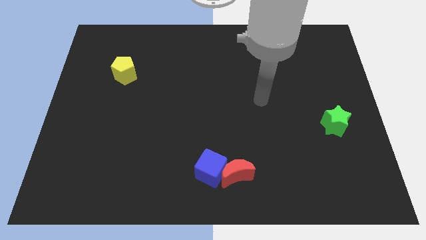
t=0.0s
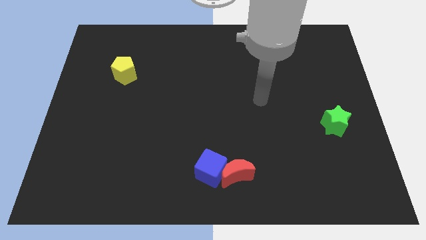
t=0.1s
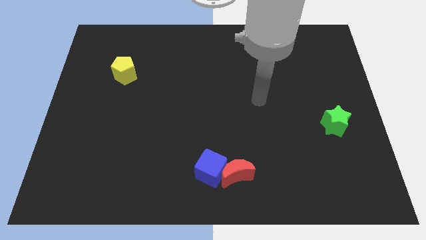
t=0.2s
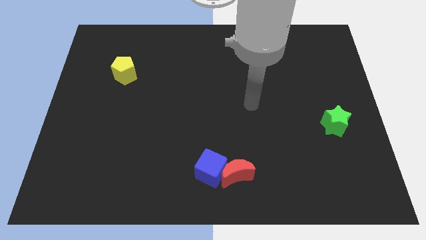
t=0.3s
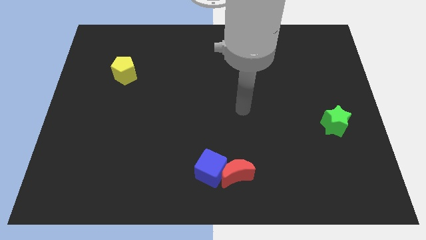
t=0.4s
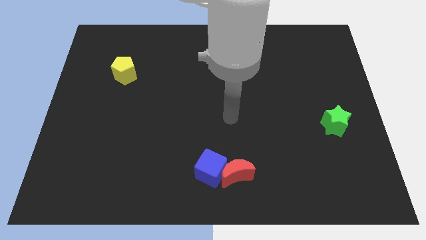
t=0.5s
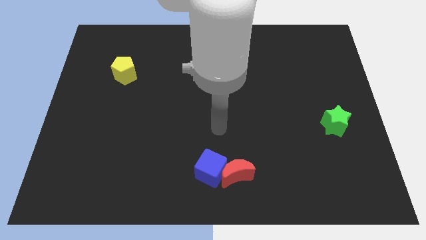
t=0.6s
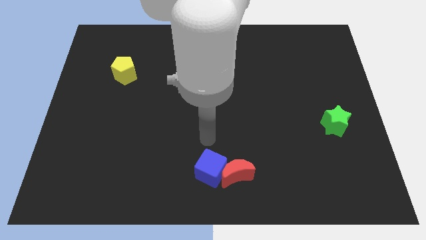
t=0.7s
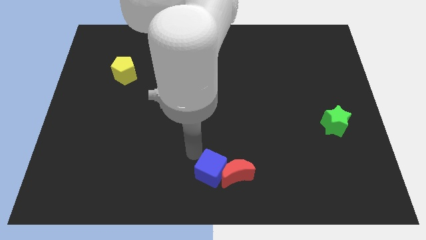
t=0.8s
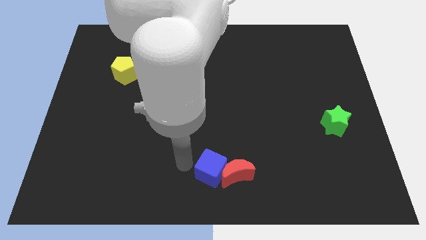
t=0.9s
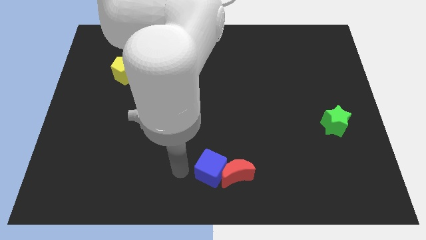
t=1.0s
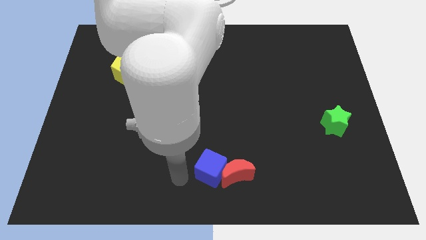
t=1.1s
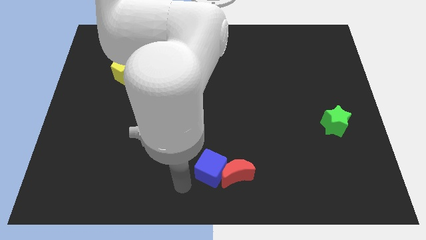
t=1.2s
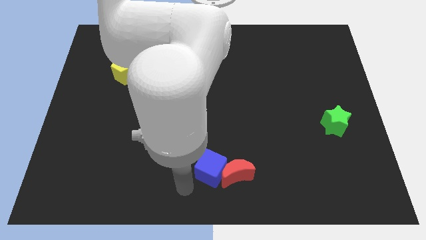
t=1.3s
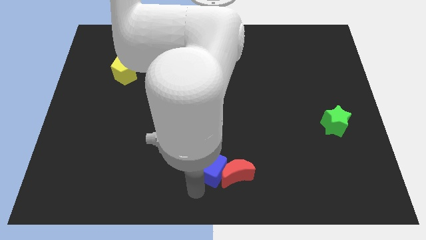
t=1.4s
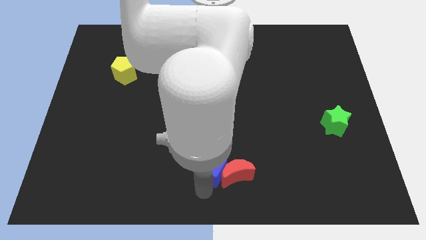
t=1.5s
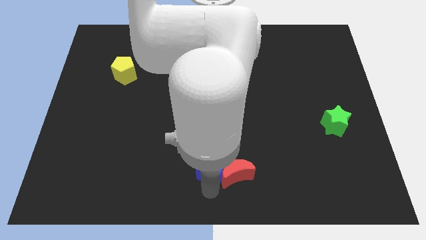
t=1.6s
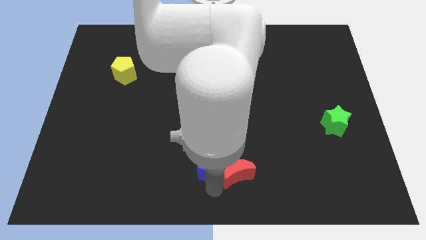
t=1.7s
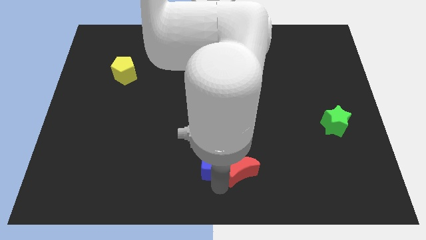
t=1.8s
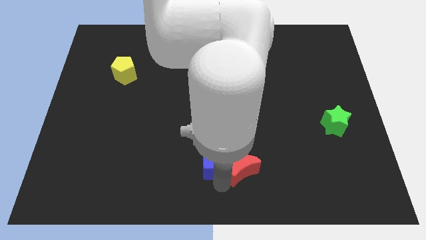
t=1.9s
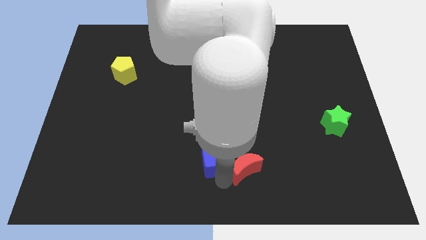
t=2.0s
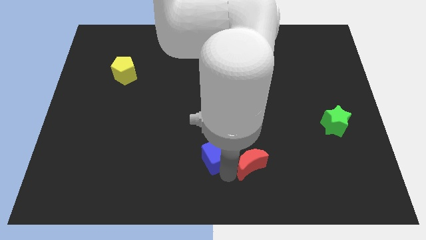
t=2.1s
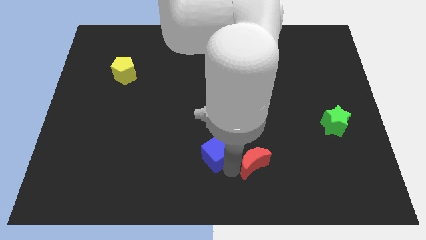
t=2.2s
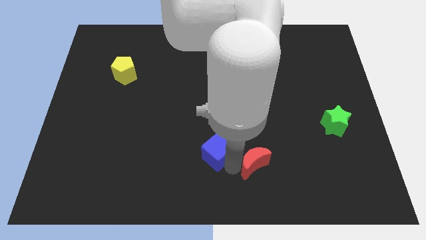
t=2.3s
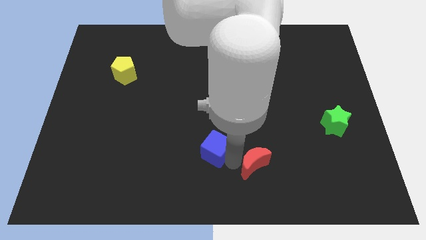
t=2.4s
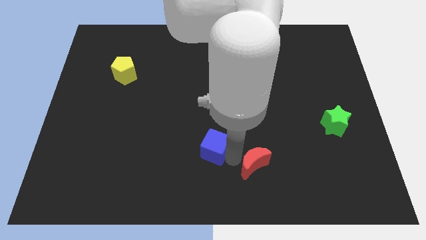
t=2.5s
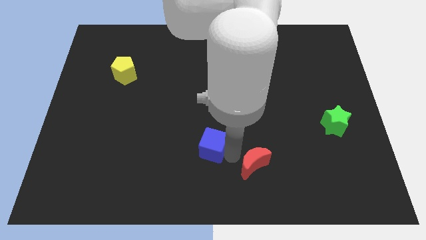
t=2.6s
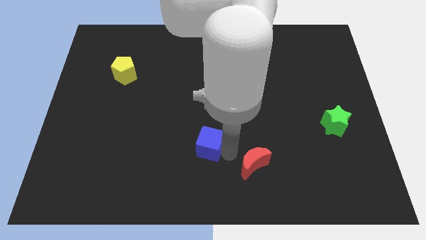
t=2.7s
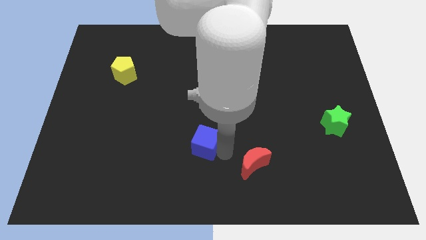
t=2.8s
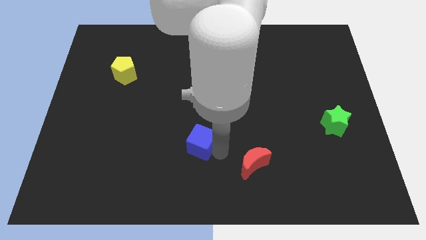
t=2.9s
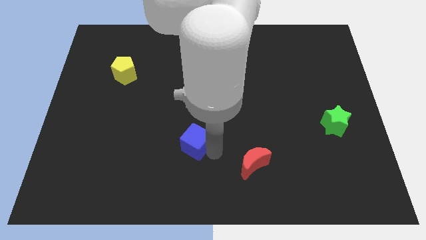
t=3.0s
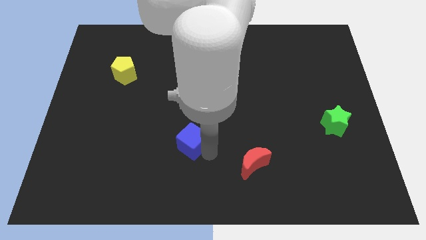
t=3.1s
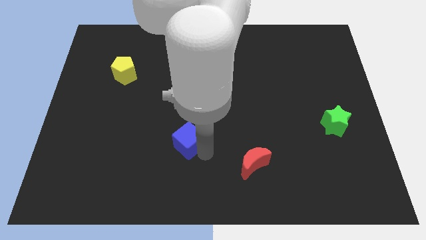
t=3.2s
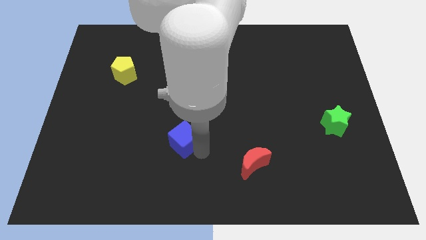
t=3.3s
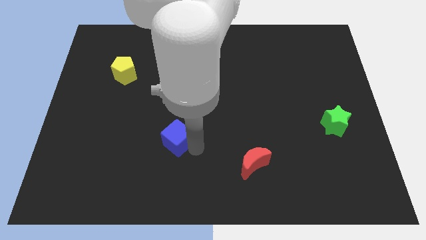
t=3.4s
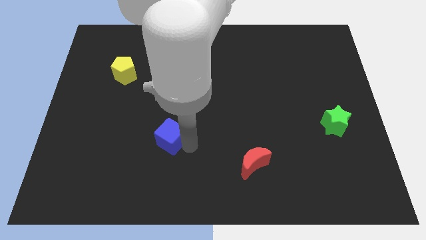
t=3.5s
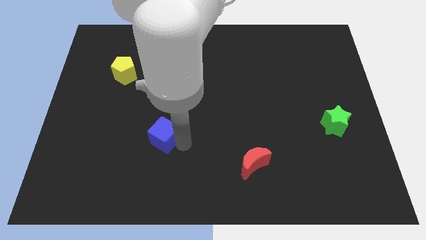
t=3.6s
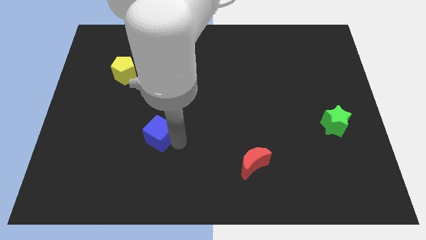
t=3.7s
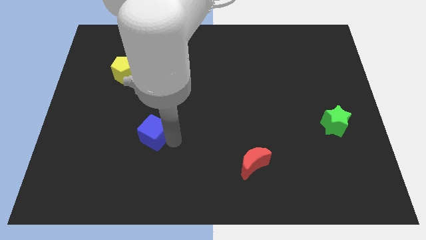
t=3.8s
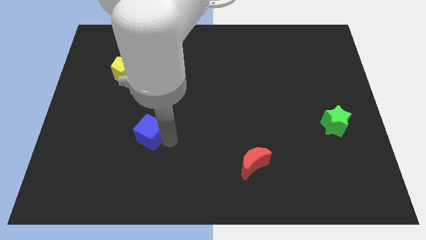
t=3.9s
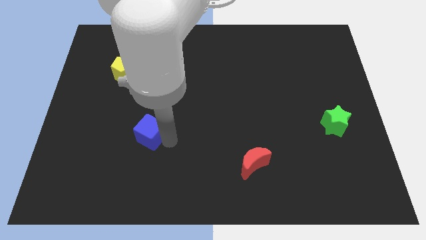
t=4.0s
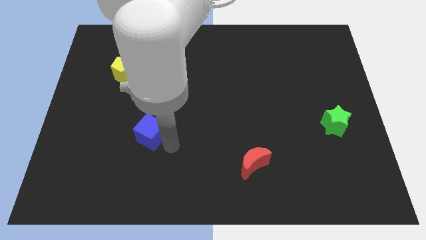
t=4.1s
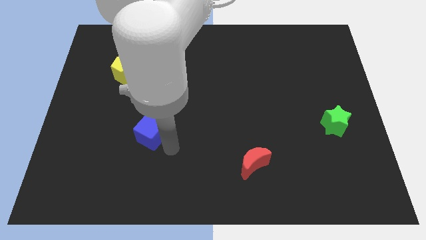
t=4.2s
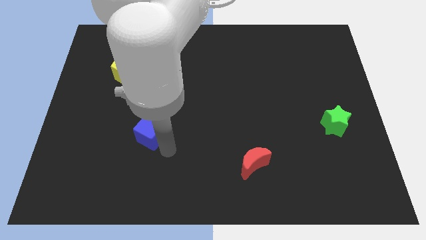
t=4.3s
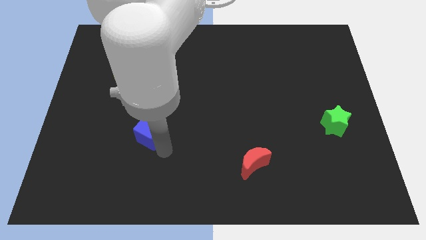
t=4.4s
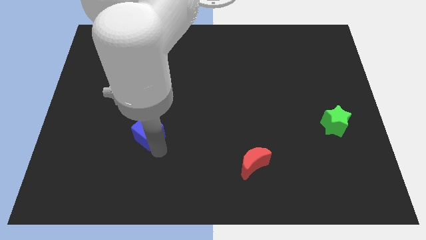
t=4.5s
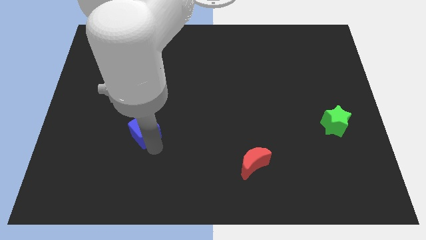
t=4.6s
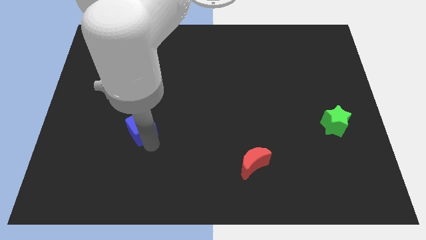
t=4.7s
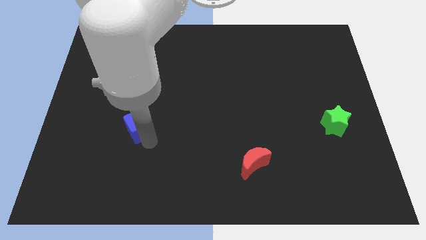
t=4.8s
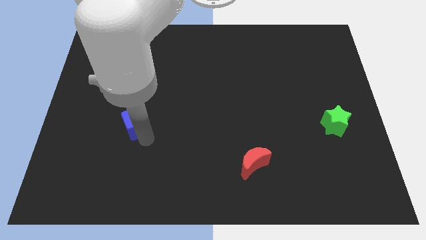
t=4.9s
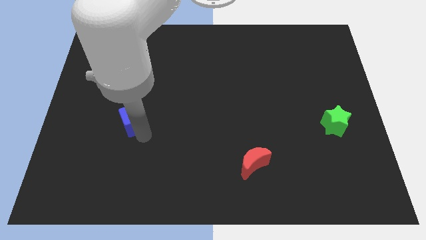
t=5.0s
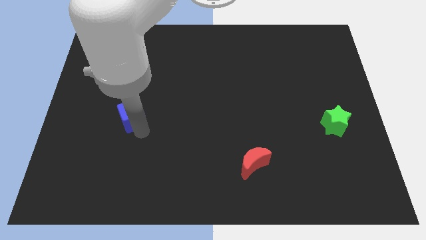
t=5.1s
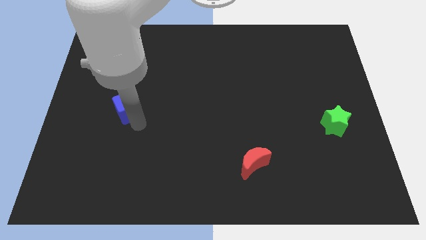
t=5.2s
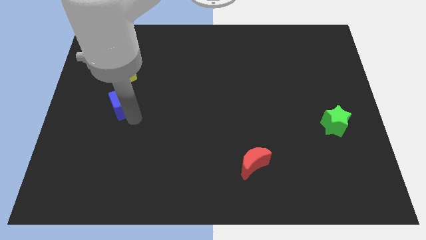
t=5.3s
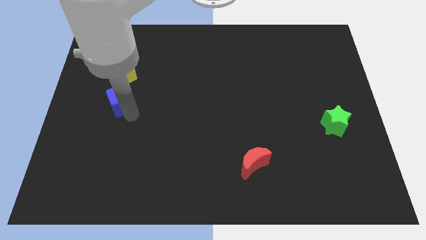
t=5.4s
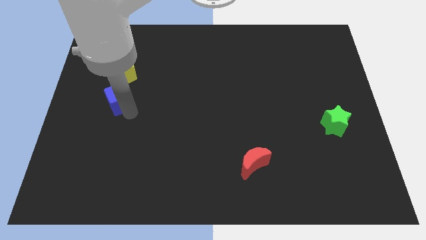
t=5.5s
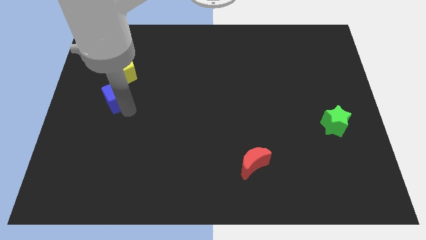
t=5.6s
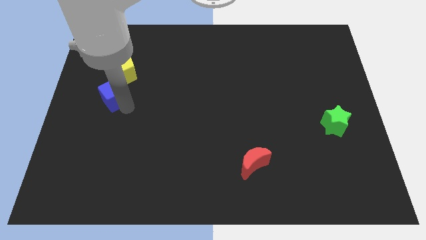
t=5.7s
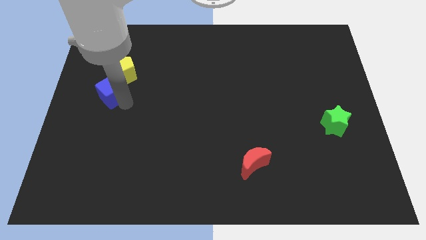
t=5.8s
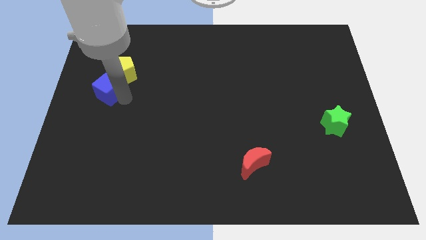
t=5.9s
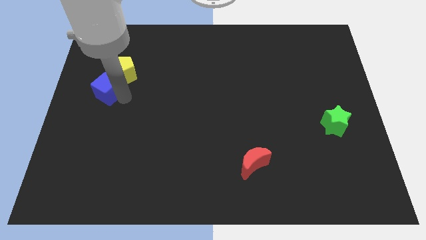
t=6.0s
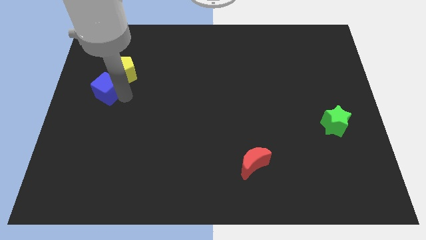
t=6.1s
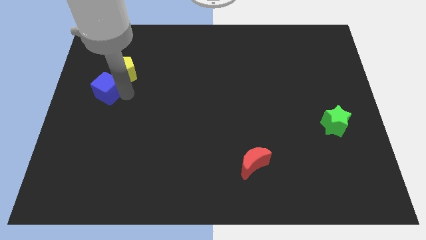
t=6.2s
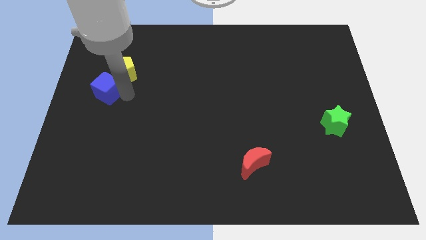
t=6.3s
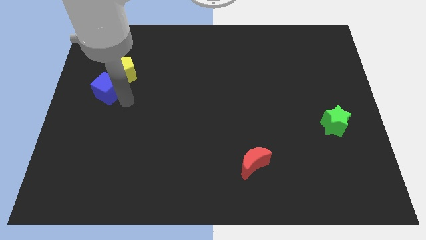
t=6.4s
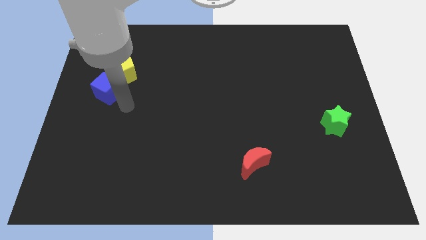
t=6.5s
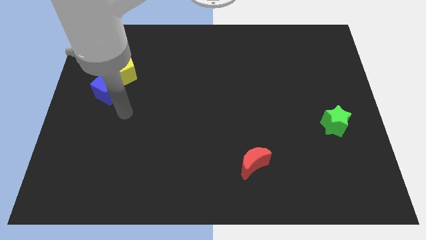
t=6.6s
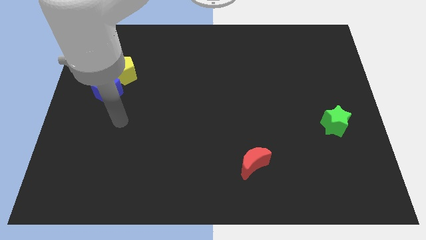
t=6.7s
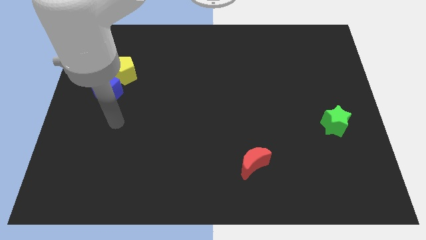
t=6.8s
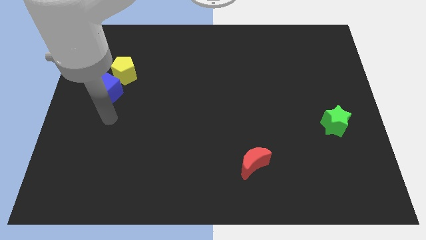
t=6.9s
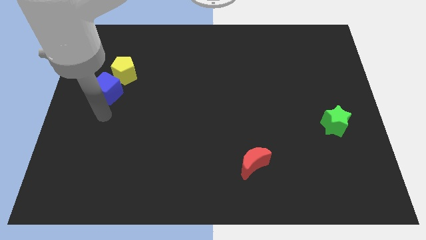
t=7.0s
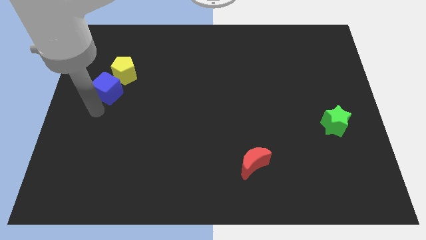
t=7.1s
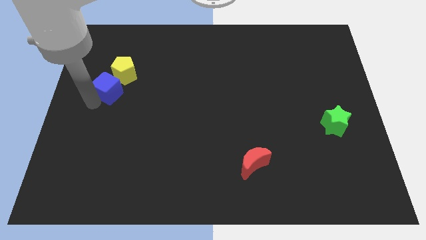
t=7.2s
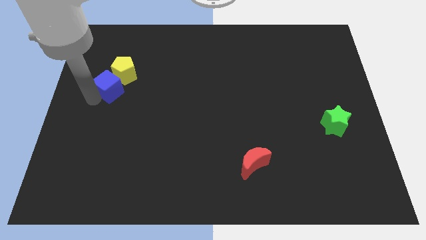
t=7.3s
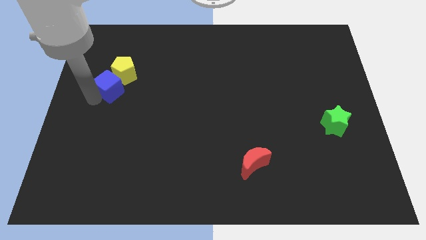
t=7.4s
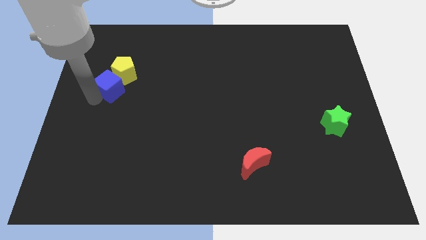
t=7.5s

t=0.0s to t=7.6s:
push the blue block towards the yellow pentagon

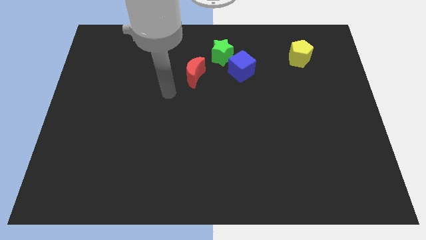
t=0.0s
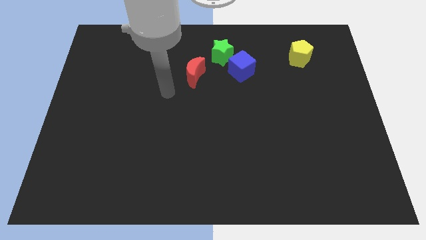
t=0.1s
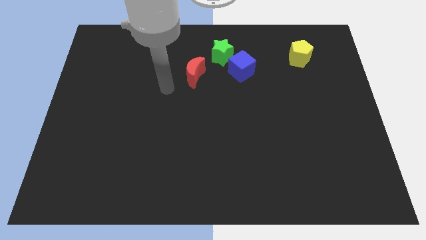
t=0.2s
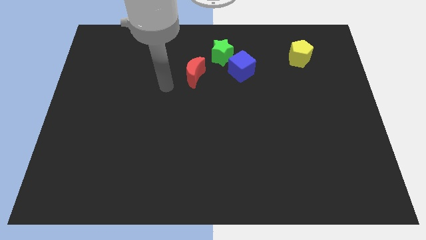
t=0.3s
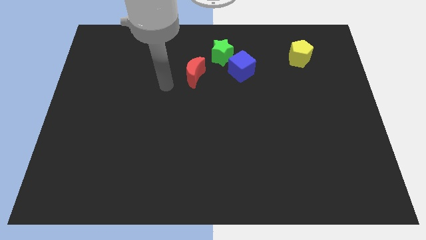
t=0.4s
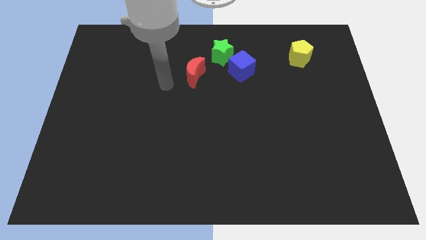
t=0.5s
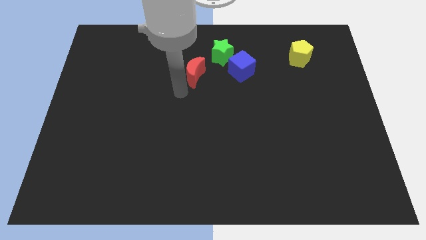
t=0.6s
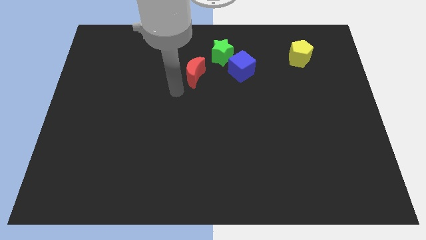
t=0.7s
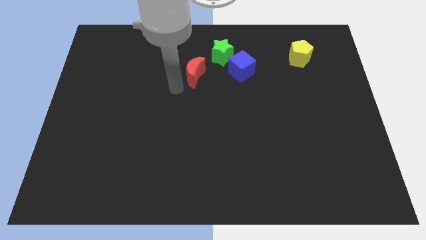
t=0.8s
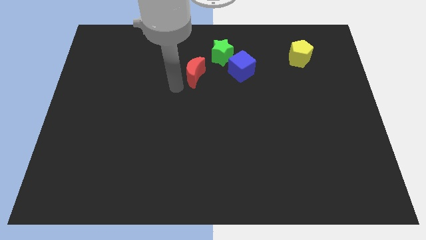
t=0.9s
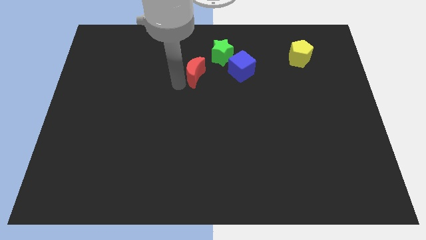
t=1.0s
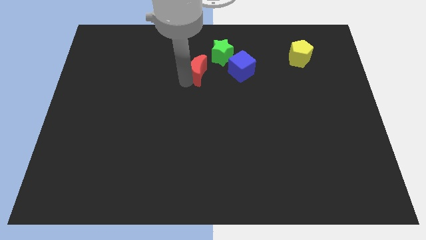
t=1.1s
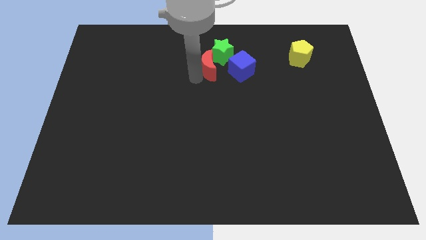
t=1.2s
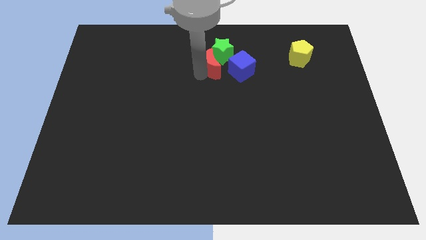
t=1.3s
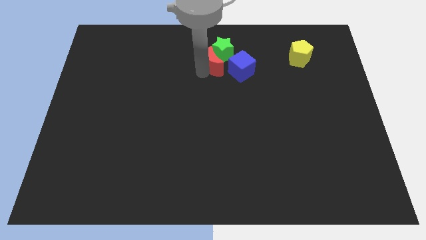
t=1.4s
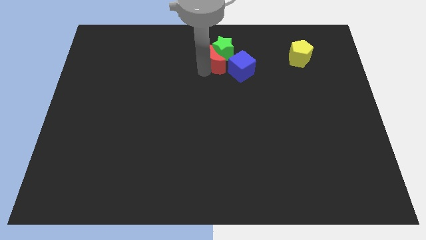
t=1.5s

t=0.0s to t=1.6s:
slide the moon towards the green star
